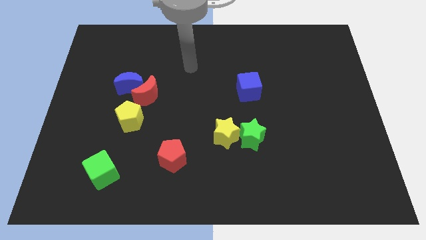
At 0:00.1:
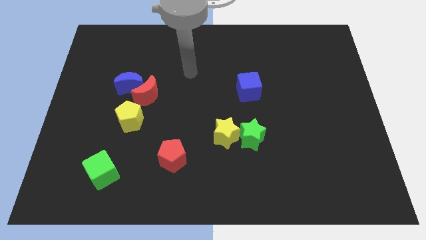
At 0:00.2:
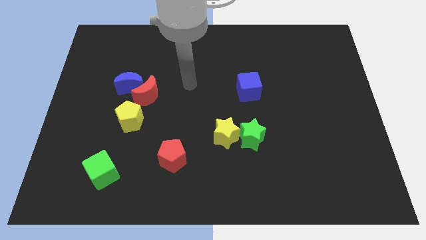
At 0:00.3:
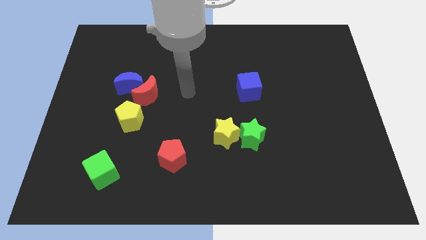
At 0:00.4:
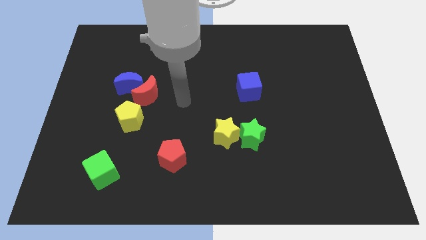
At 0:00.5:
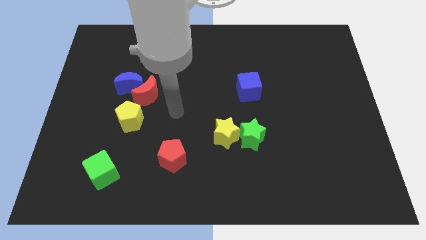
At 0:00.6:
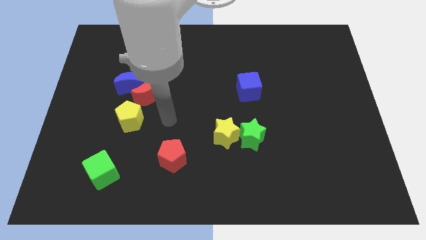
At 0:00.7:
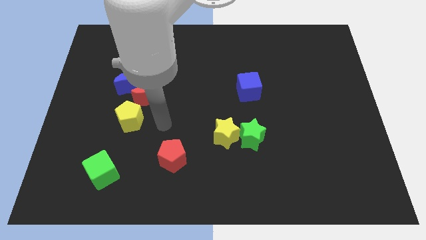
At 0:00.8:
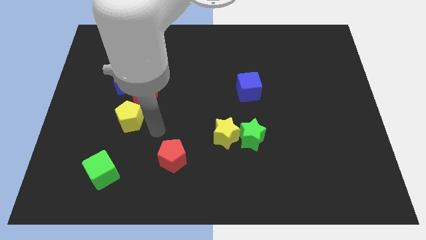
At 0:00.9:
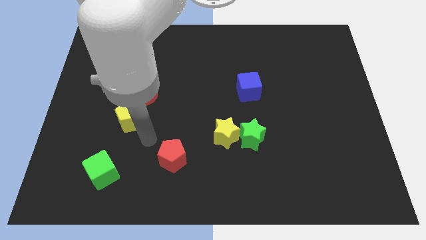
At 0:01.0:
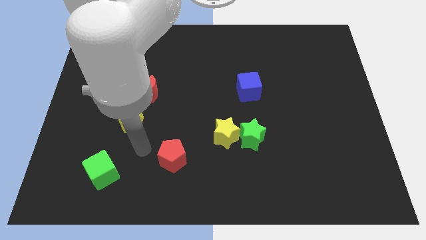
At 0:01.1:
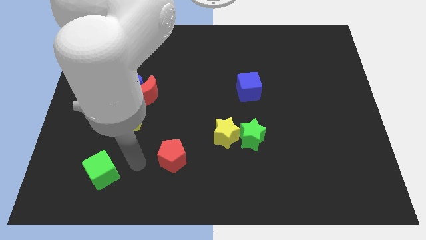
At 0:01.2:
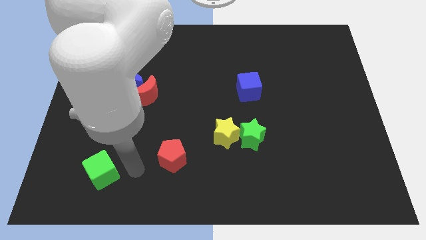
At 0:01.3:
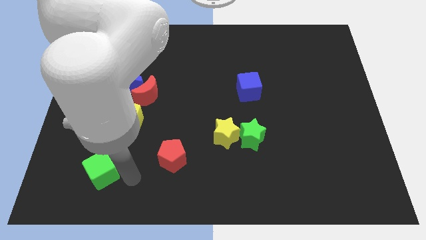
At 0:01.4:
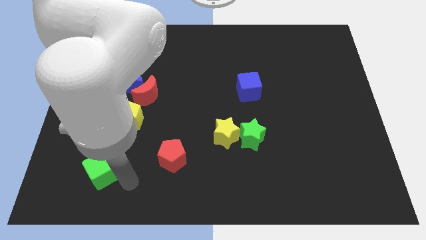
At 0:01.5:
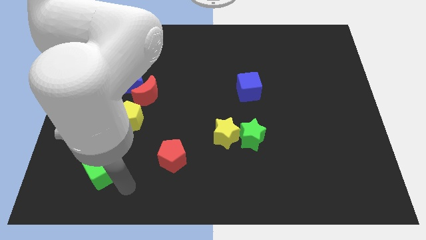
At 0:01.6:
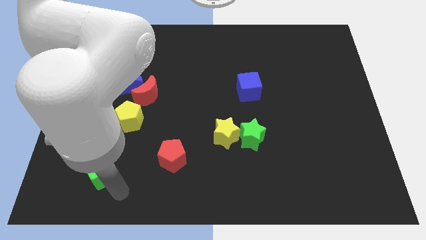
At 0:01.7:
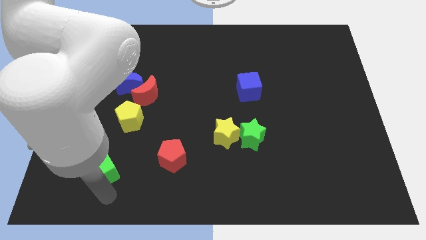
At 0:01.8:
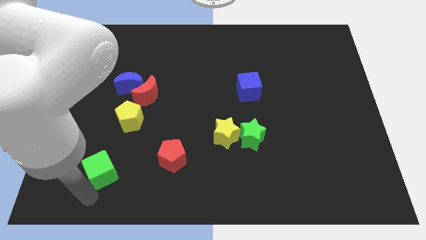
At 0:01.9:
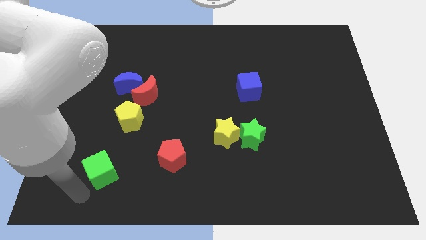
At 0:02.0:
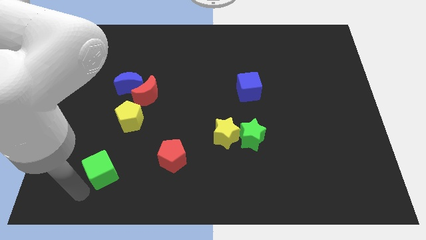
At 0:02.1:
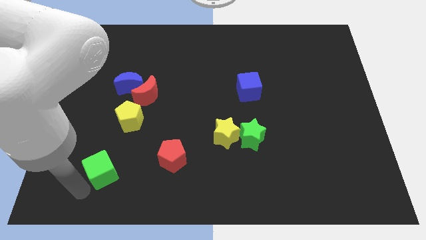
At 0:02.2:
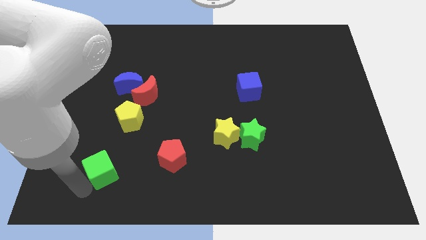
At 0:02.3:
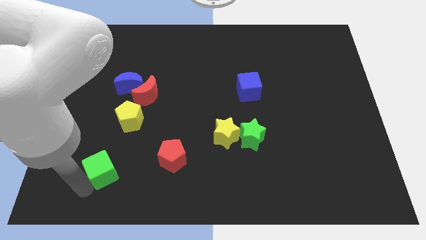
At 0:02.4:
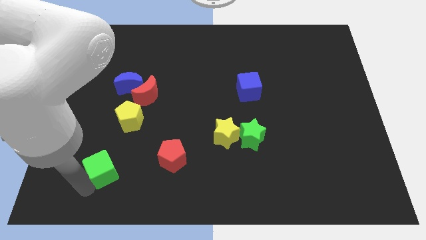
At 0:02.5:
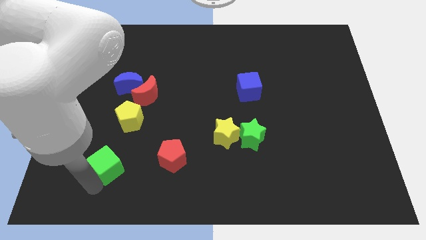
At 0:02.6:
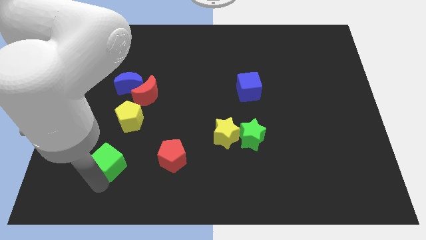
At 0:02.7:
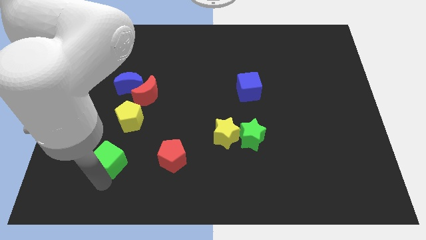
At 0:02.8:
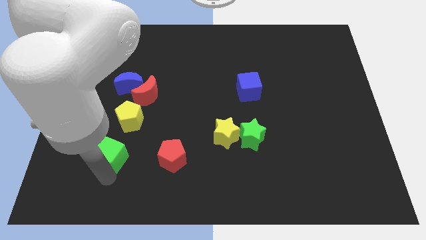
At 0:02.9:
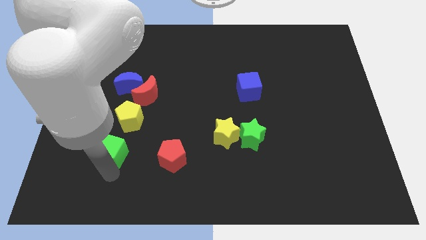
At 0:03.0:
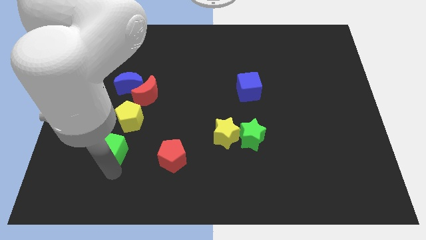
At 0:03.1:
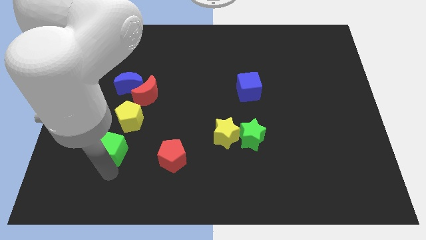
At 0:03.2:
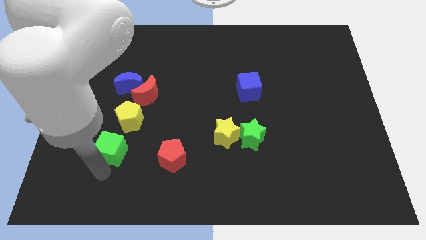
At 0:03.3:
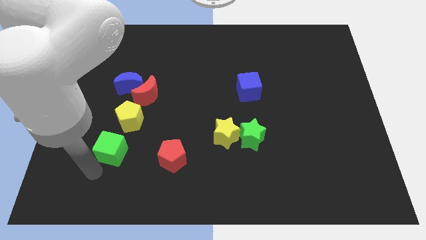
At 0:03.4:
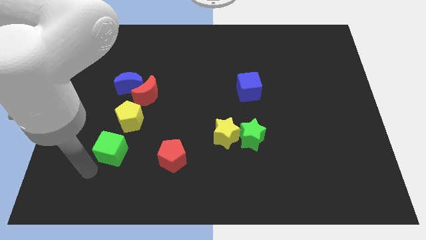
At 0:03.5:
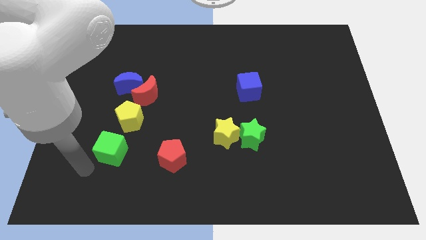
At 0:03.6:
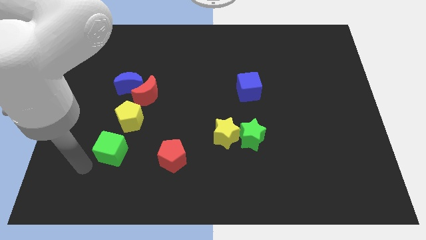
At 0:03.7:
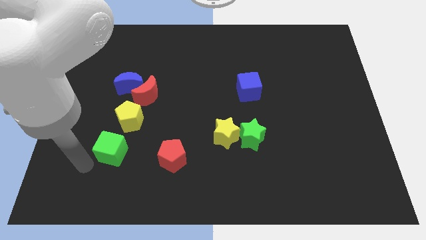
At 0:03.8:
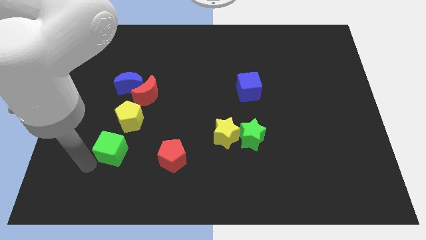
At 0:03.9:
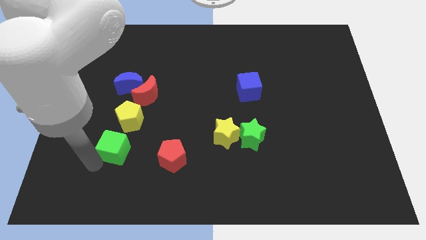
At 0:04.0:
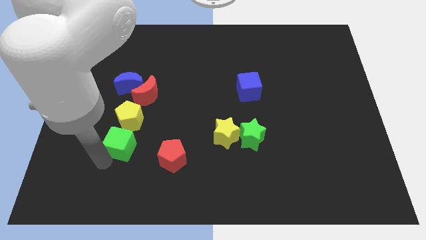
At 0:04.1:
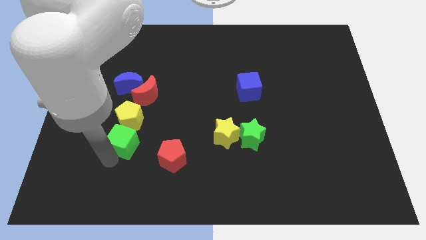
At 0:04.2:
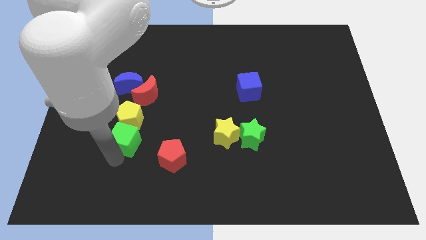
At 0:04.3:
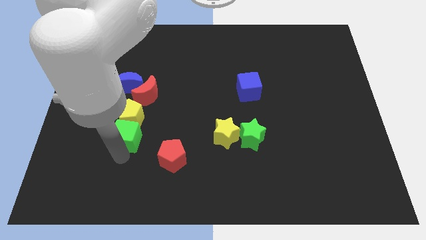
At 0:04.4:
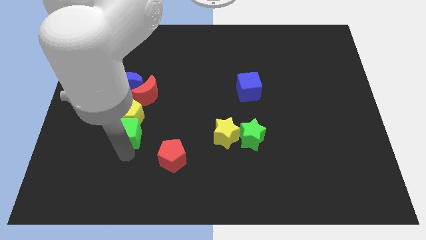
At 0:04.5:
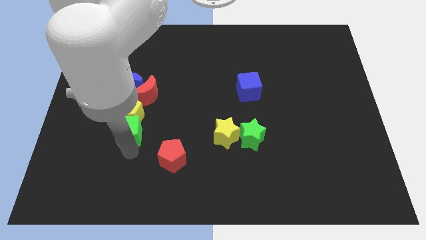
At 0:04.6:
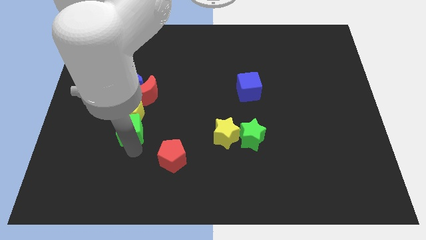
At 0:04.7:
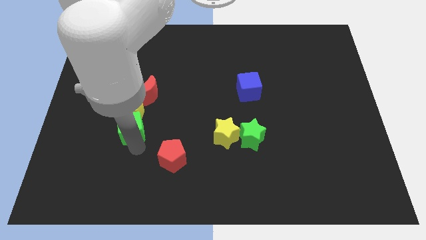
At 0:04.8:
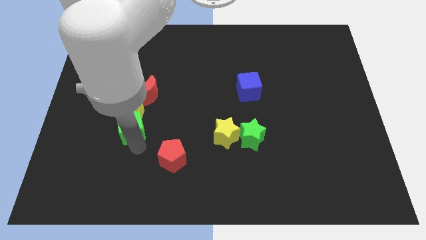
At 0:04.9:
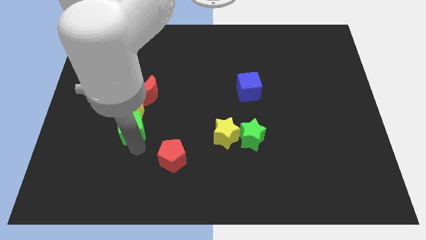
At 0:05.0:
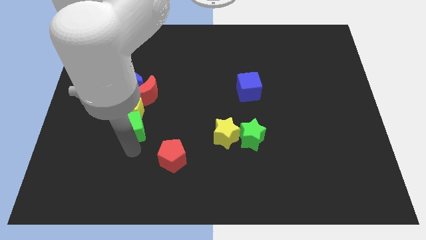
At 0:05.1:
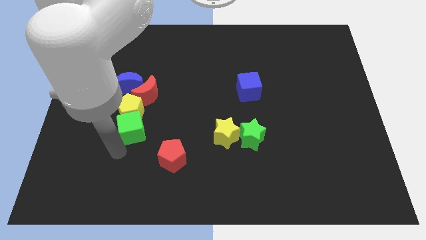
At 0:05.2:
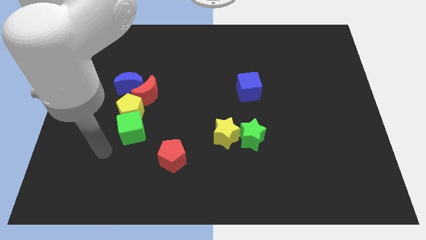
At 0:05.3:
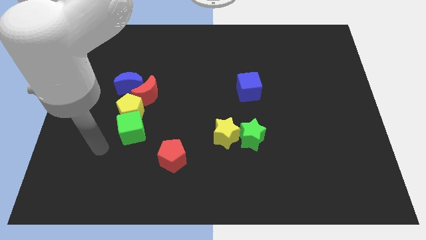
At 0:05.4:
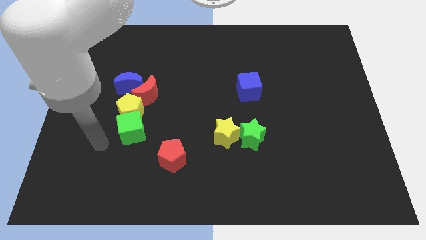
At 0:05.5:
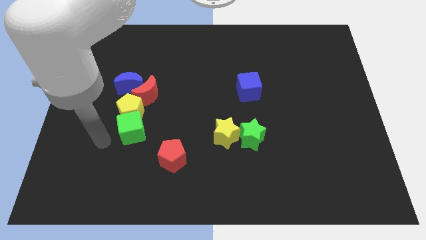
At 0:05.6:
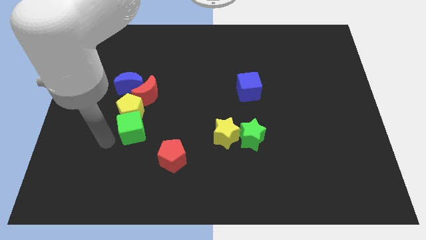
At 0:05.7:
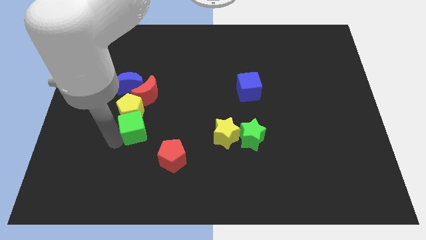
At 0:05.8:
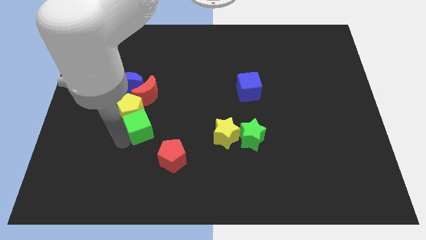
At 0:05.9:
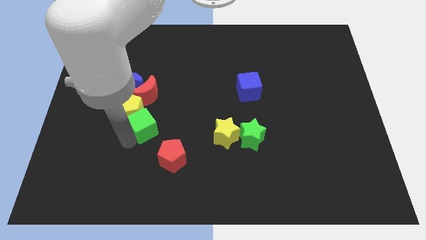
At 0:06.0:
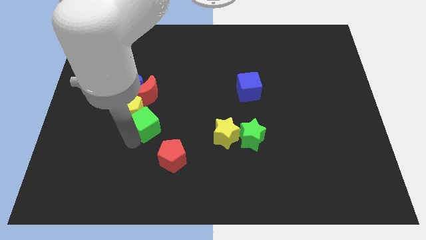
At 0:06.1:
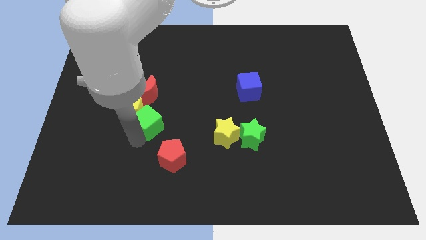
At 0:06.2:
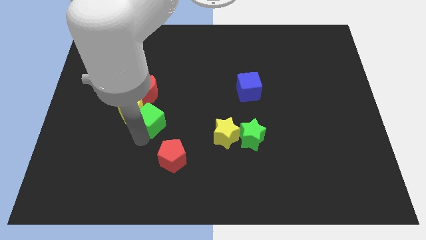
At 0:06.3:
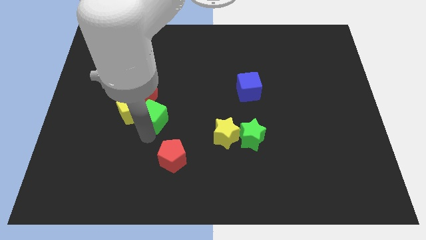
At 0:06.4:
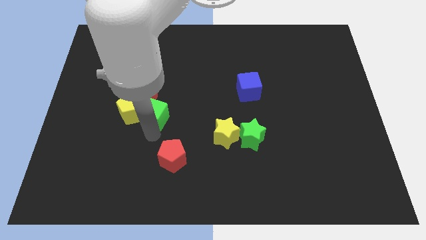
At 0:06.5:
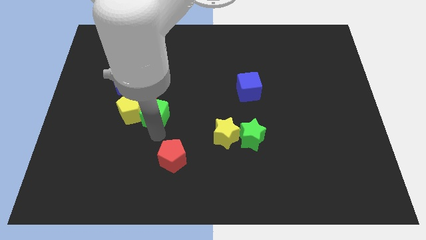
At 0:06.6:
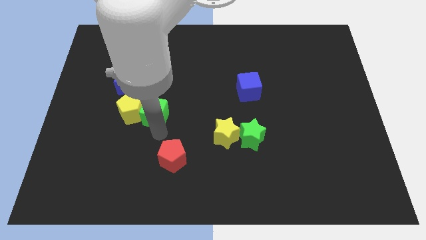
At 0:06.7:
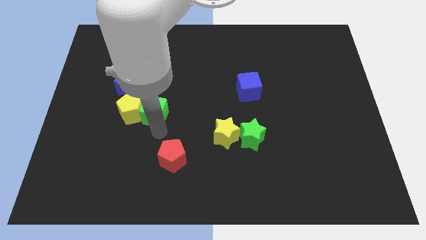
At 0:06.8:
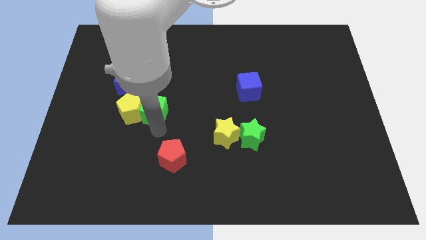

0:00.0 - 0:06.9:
push the green cube to the red moon

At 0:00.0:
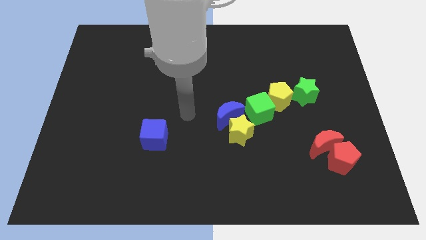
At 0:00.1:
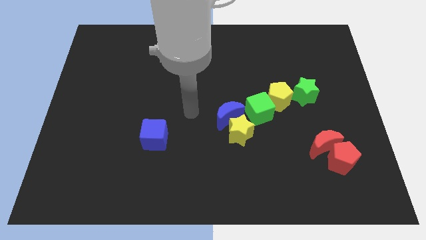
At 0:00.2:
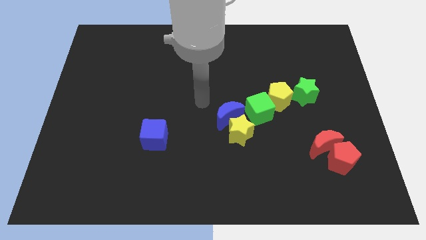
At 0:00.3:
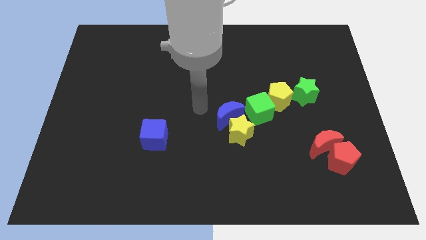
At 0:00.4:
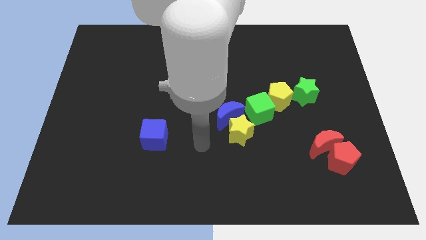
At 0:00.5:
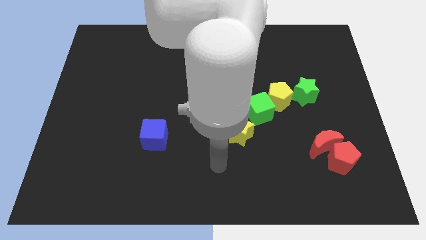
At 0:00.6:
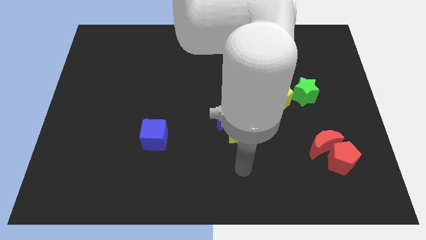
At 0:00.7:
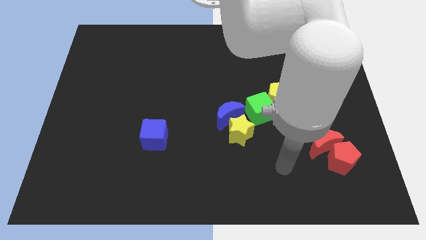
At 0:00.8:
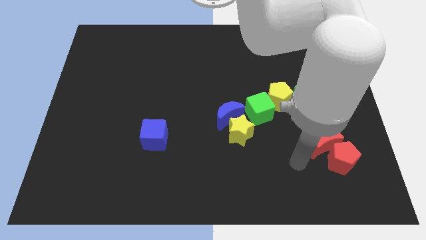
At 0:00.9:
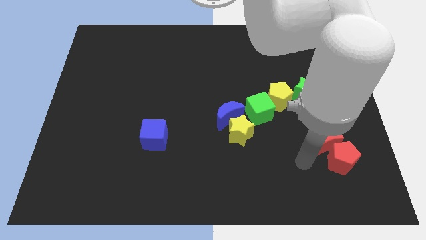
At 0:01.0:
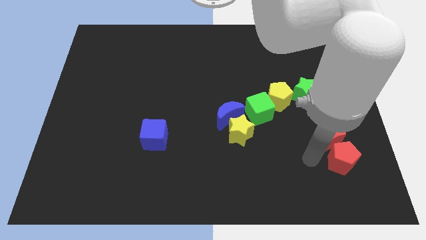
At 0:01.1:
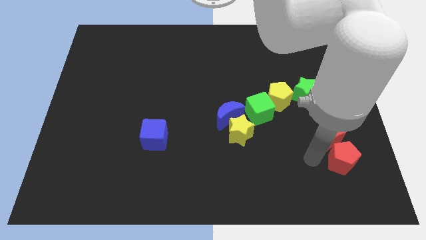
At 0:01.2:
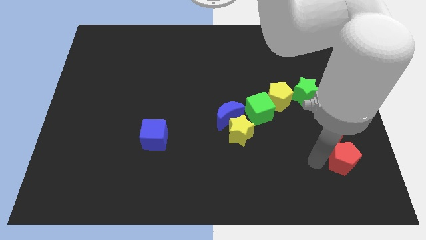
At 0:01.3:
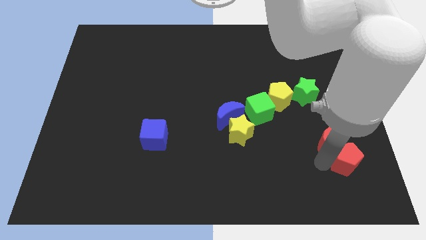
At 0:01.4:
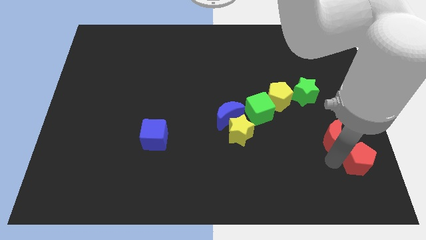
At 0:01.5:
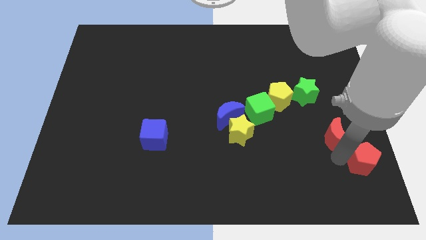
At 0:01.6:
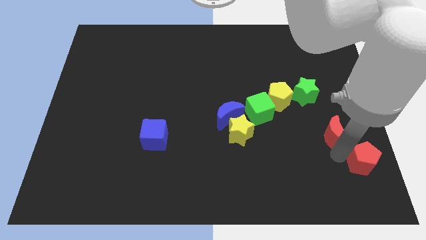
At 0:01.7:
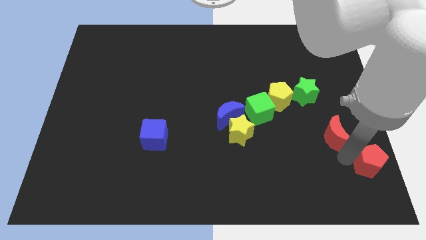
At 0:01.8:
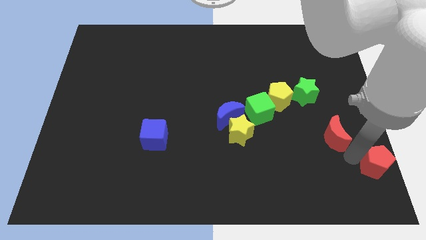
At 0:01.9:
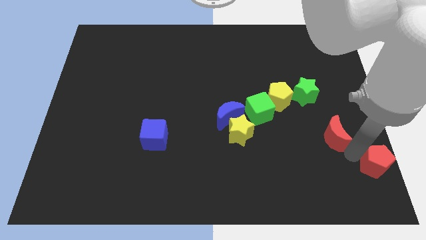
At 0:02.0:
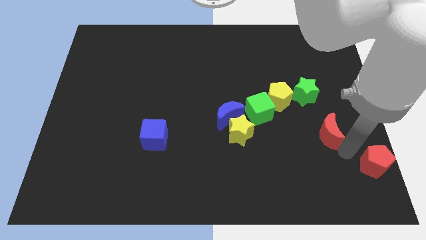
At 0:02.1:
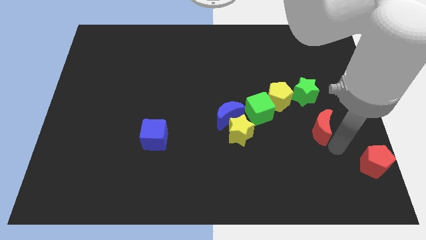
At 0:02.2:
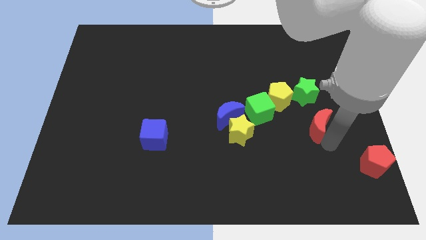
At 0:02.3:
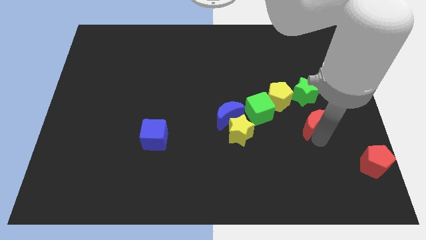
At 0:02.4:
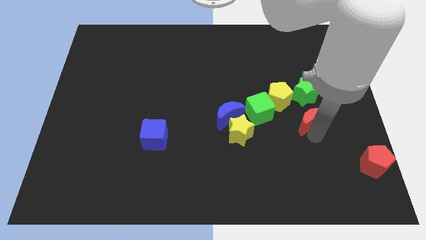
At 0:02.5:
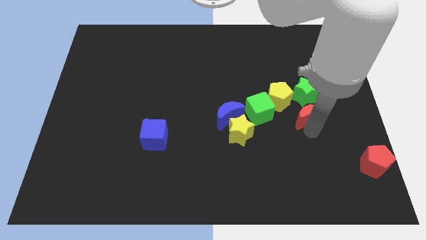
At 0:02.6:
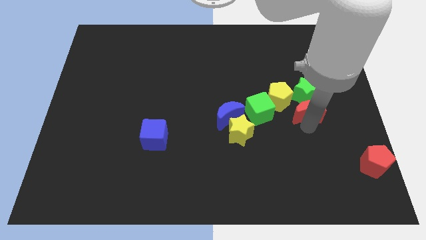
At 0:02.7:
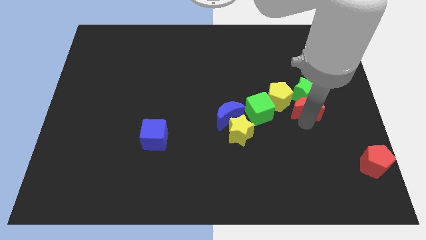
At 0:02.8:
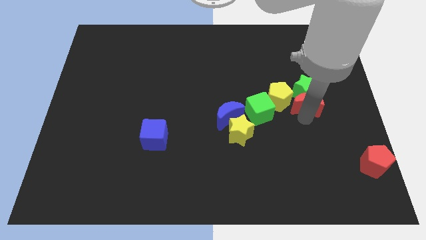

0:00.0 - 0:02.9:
push the red moon next to the green star
